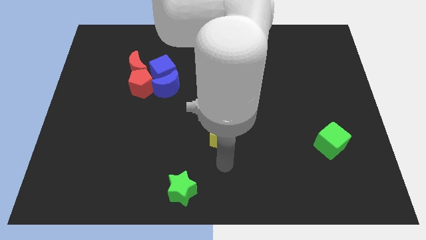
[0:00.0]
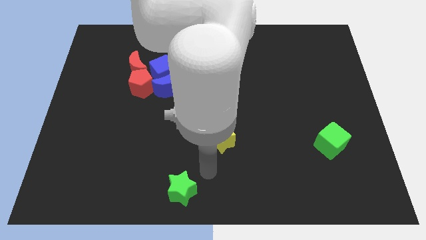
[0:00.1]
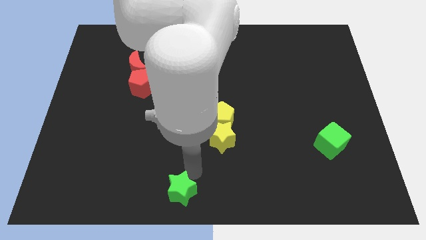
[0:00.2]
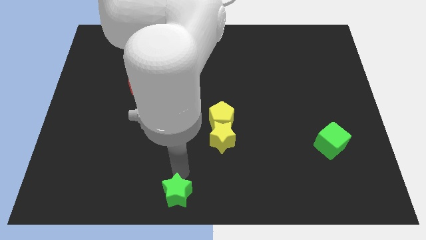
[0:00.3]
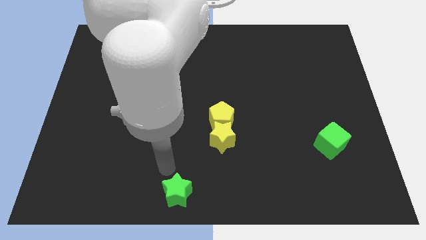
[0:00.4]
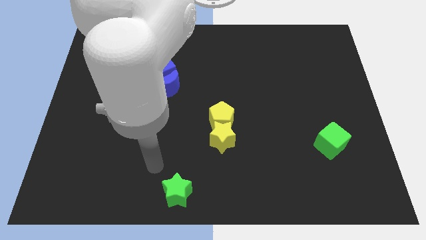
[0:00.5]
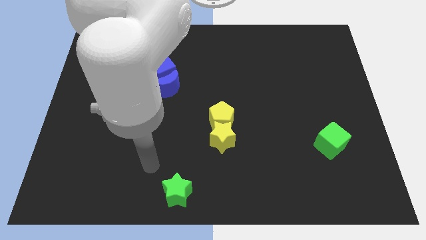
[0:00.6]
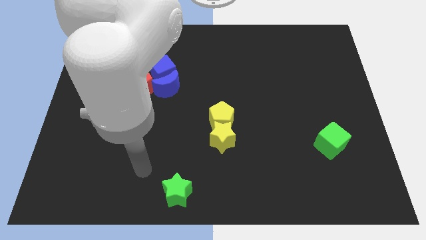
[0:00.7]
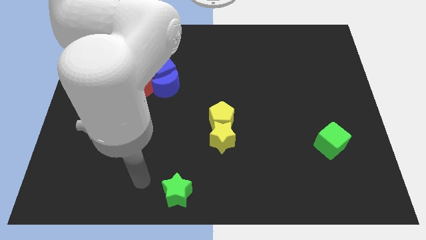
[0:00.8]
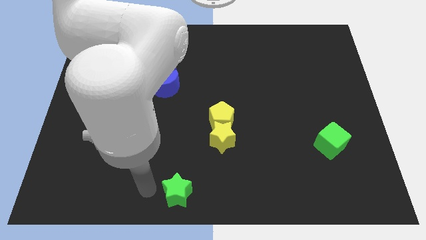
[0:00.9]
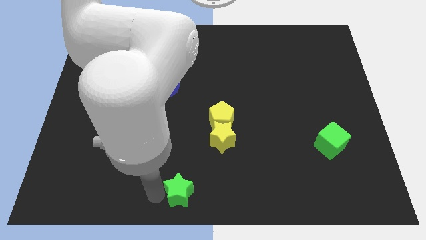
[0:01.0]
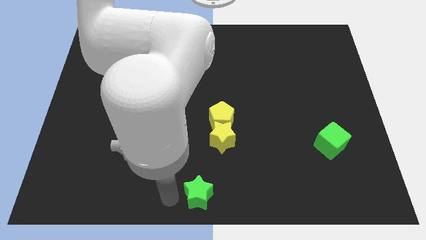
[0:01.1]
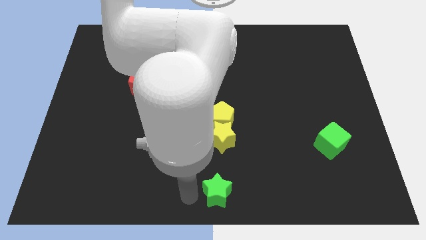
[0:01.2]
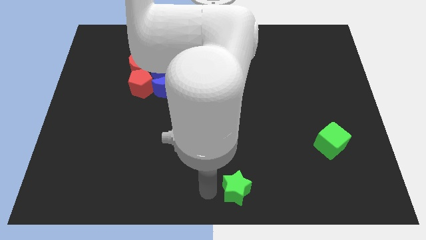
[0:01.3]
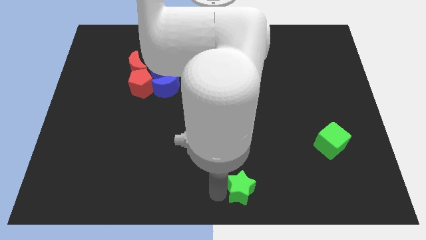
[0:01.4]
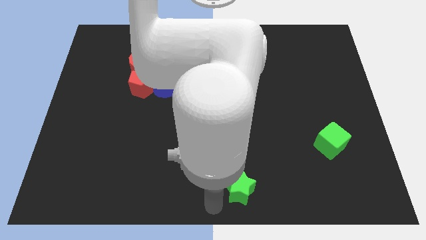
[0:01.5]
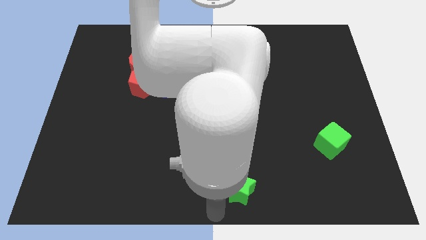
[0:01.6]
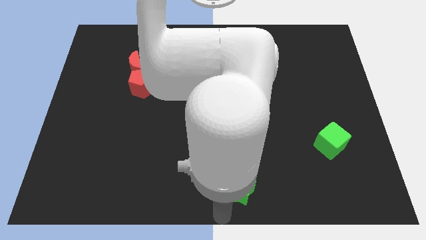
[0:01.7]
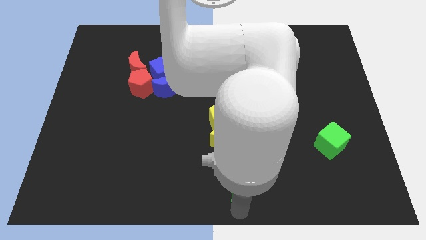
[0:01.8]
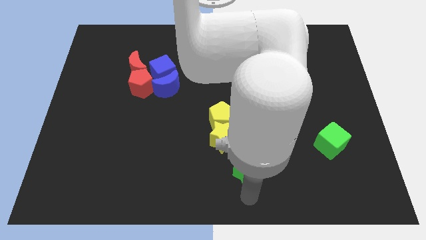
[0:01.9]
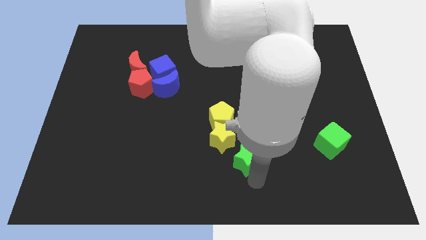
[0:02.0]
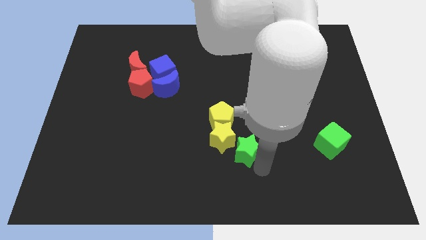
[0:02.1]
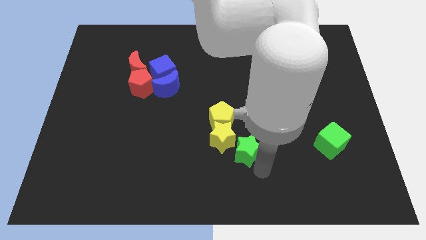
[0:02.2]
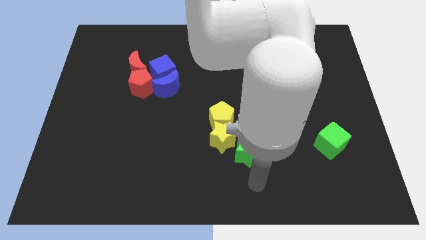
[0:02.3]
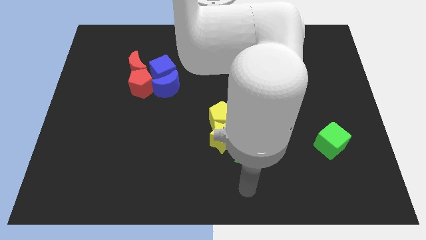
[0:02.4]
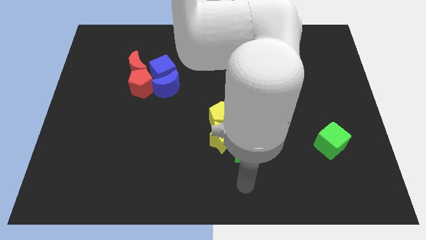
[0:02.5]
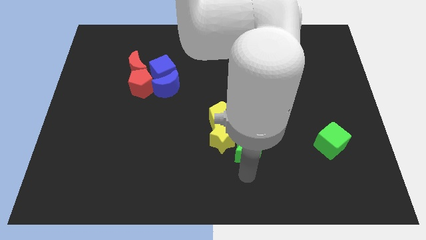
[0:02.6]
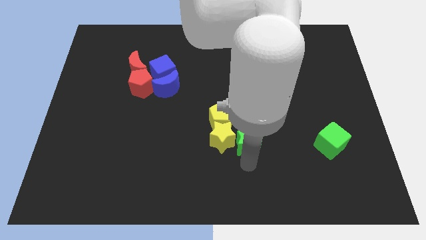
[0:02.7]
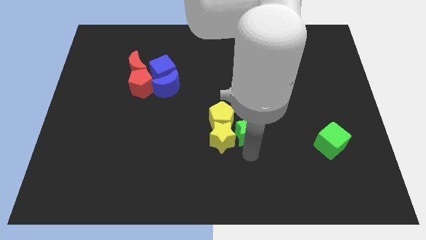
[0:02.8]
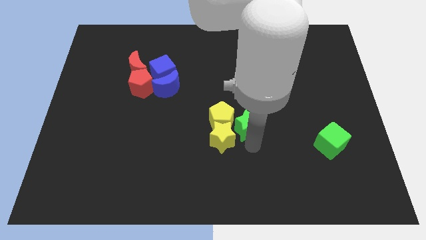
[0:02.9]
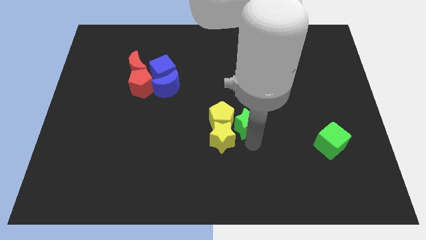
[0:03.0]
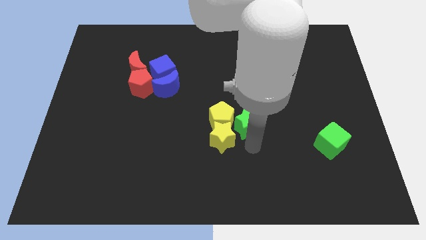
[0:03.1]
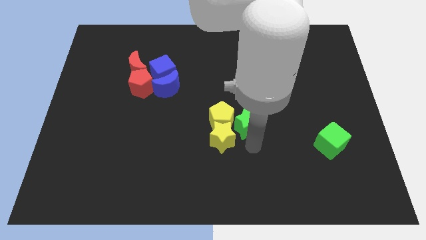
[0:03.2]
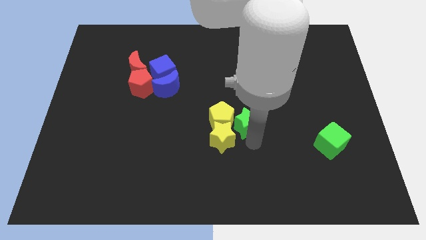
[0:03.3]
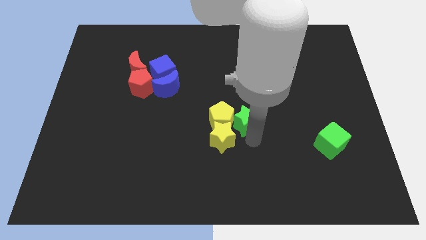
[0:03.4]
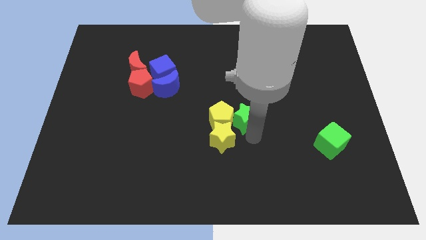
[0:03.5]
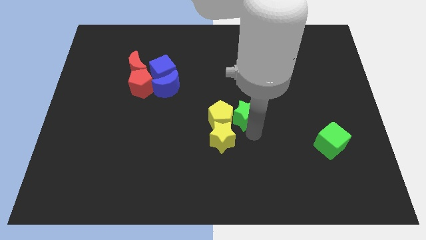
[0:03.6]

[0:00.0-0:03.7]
push the green star into the yellow pentagon

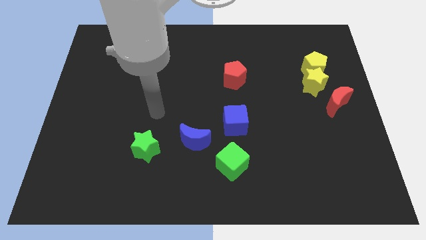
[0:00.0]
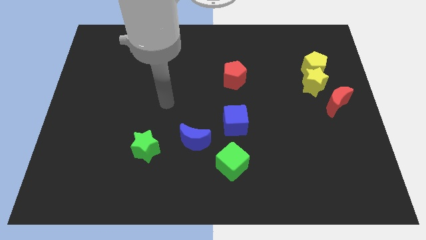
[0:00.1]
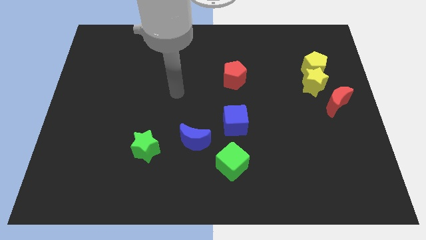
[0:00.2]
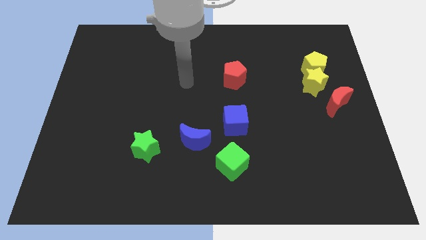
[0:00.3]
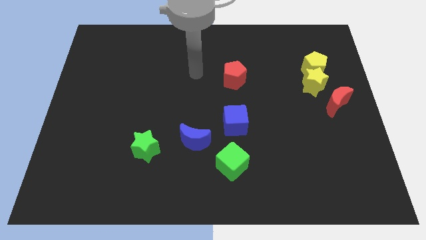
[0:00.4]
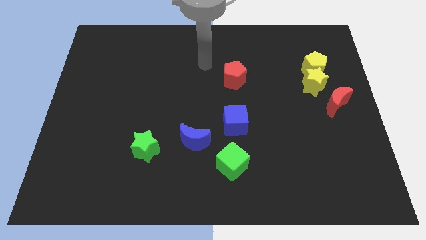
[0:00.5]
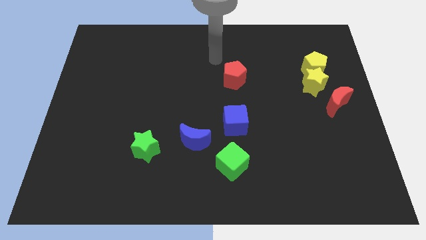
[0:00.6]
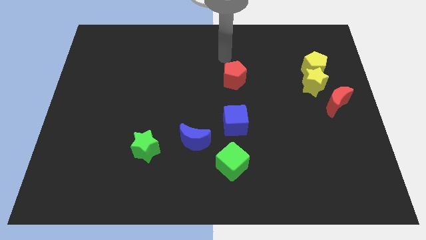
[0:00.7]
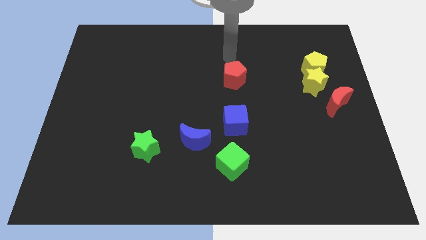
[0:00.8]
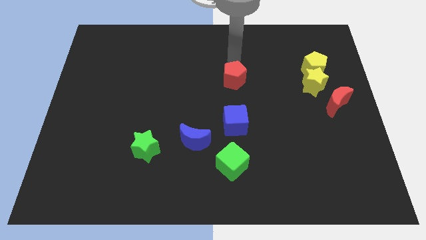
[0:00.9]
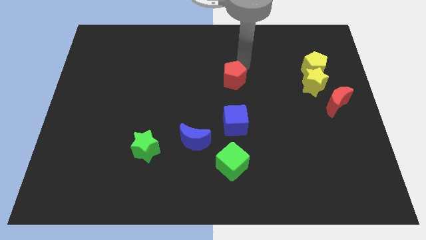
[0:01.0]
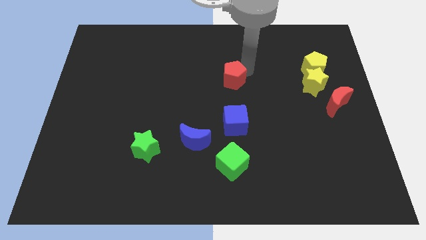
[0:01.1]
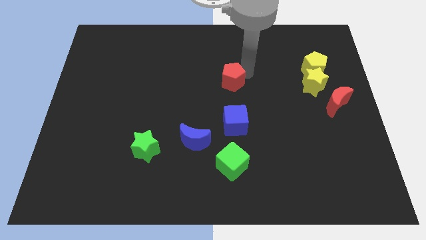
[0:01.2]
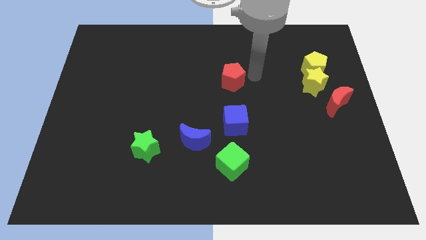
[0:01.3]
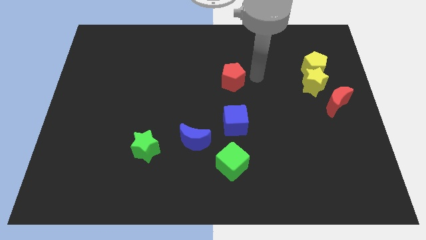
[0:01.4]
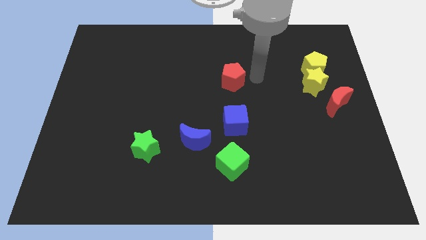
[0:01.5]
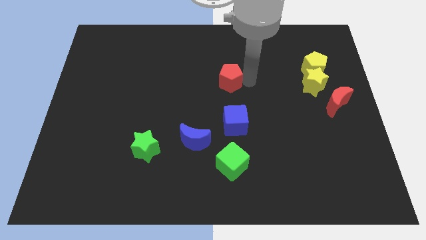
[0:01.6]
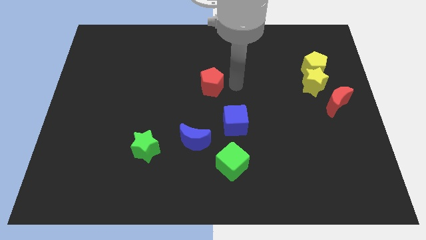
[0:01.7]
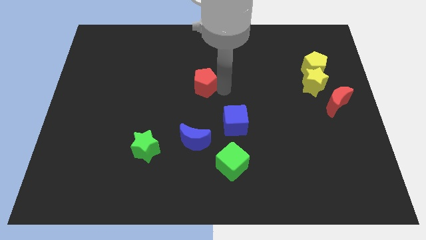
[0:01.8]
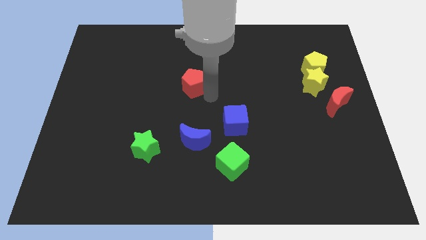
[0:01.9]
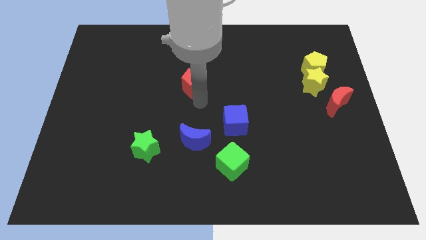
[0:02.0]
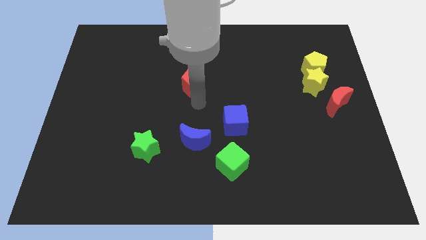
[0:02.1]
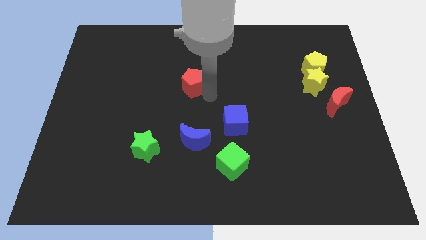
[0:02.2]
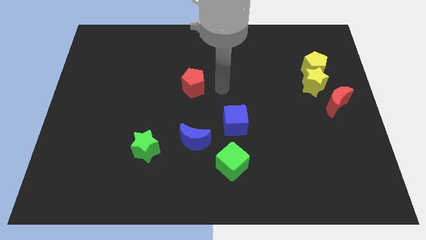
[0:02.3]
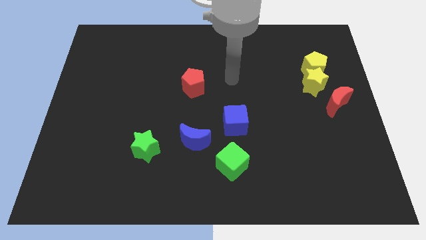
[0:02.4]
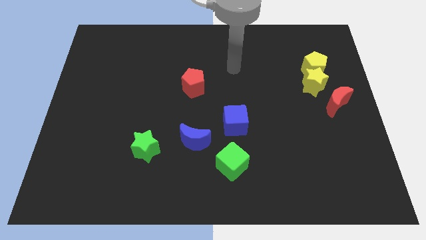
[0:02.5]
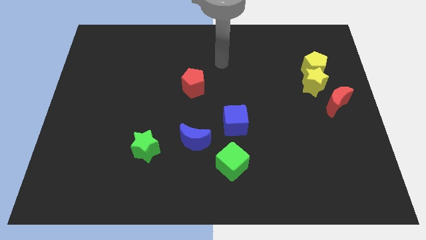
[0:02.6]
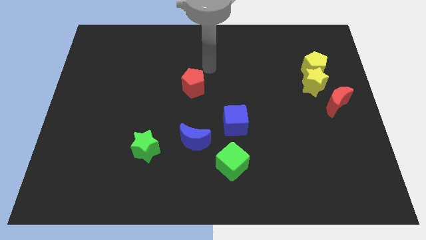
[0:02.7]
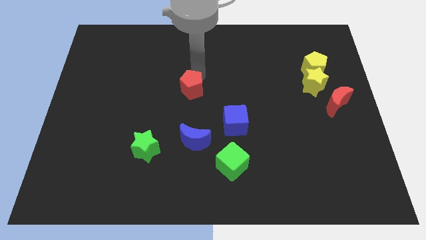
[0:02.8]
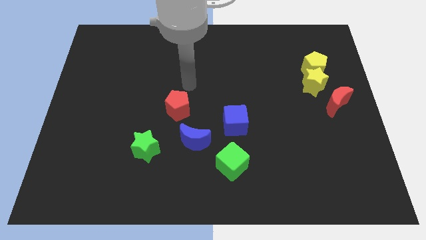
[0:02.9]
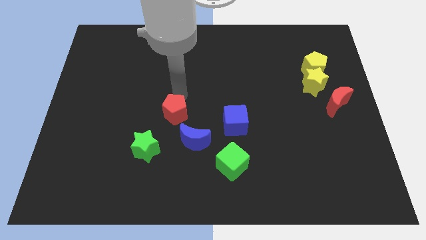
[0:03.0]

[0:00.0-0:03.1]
bring red pentagon close to blue moon

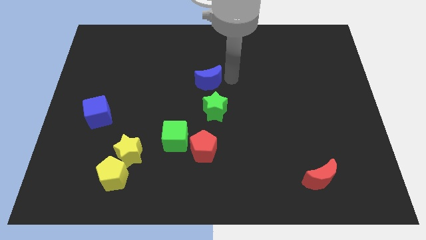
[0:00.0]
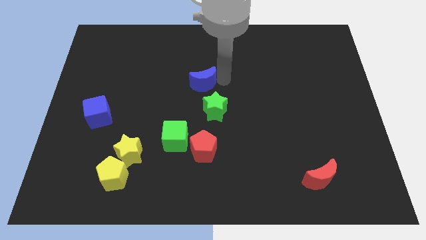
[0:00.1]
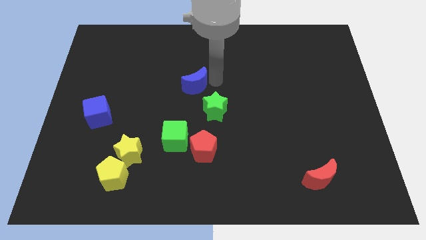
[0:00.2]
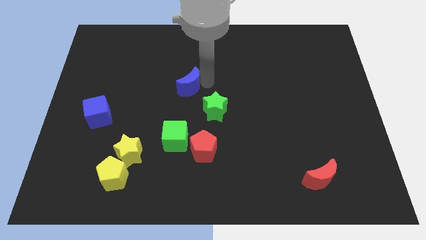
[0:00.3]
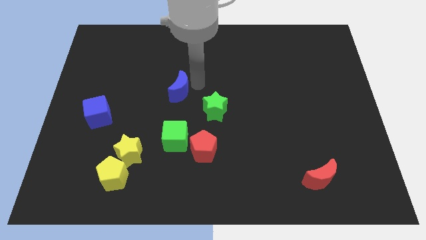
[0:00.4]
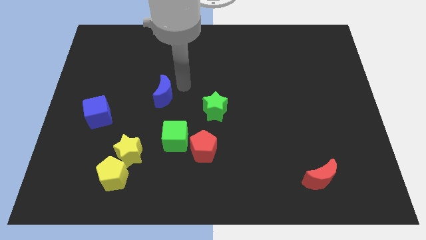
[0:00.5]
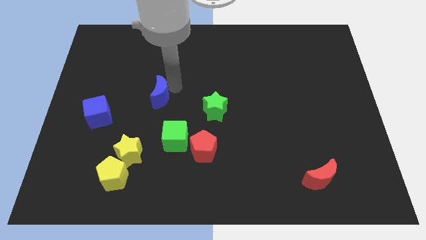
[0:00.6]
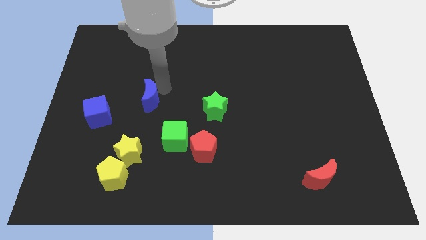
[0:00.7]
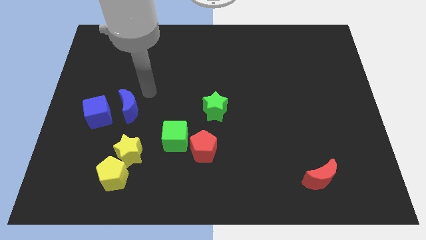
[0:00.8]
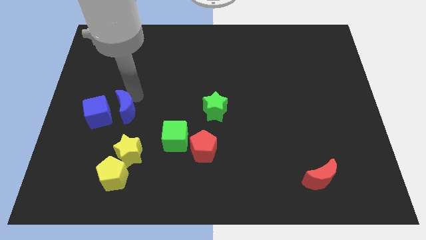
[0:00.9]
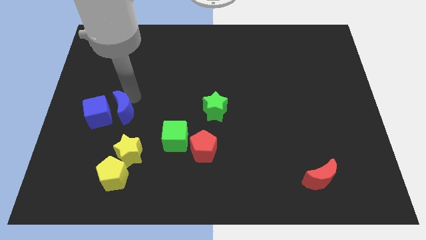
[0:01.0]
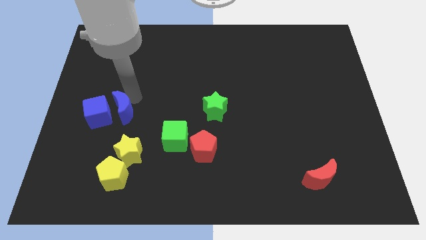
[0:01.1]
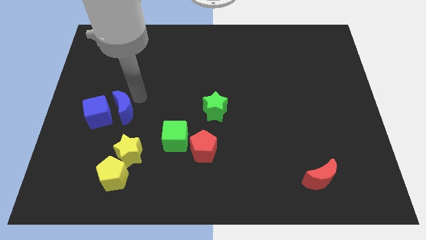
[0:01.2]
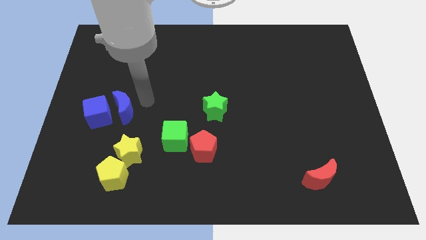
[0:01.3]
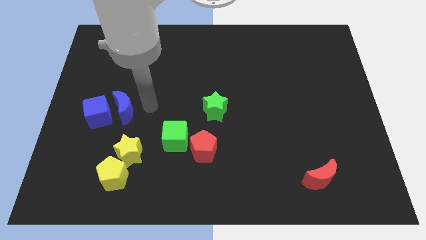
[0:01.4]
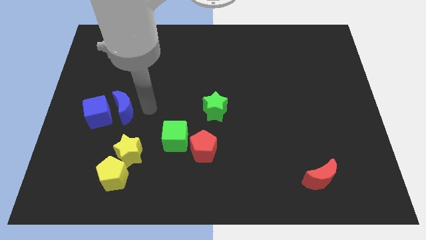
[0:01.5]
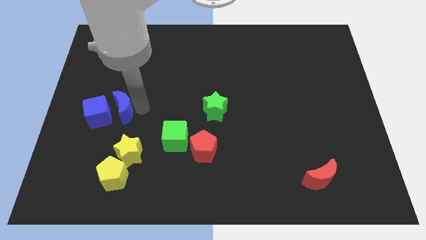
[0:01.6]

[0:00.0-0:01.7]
push the blue crescent slightly towards the blue cube

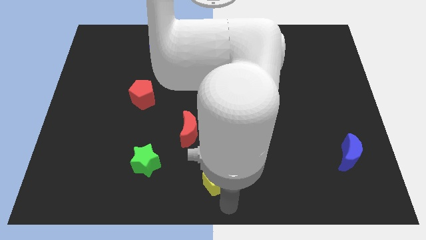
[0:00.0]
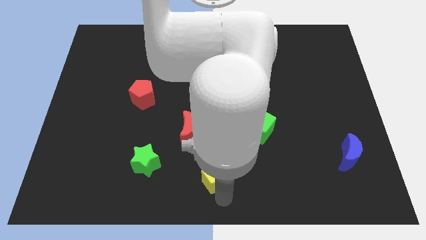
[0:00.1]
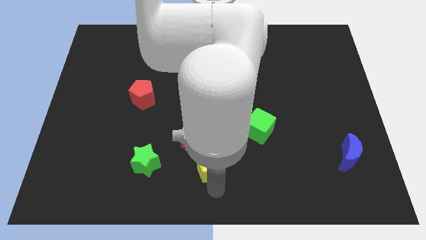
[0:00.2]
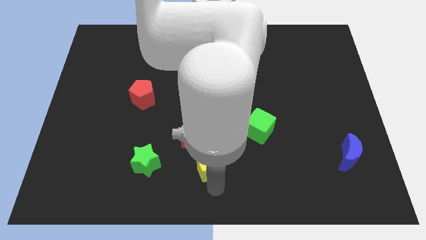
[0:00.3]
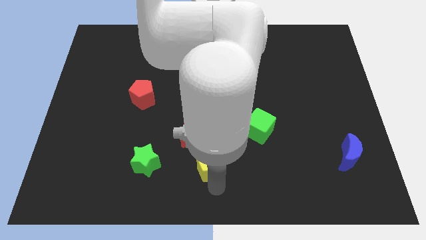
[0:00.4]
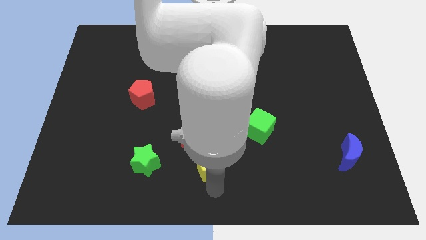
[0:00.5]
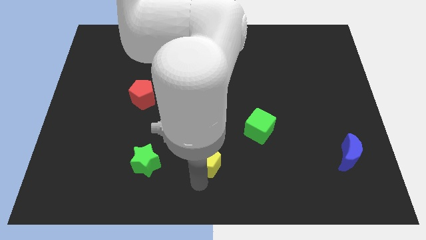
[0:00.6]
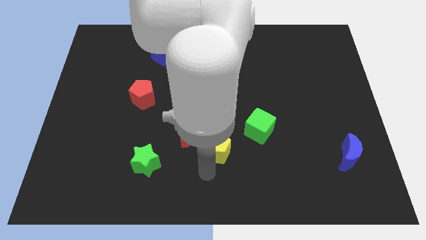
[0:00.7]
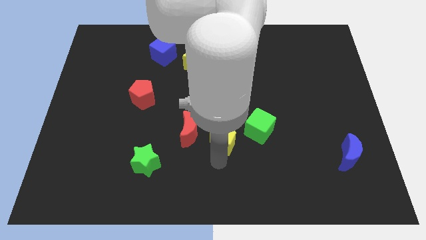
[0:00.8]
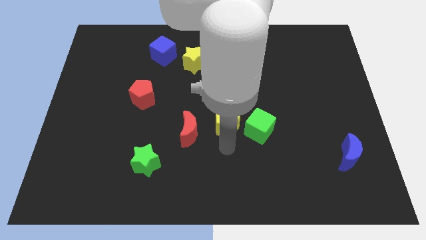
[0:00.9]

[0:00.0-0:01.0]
push yellow star beside green cube
